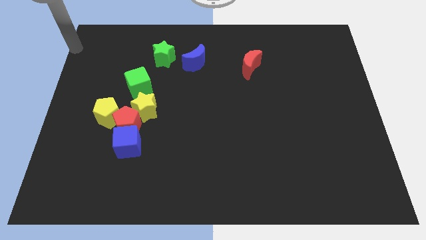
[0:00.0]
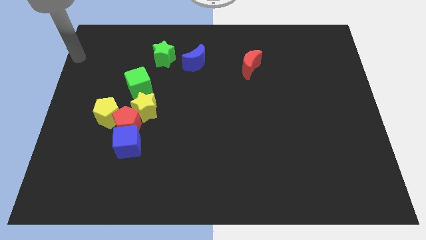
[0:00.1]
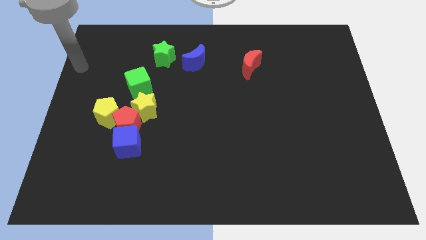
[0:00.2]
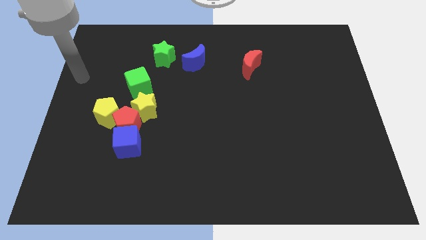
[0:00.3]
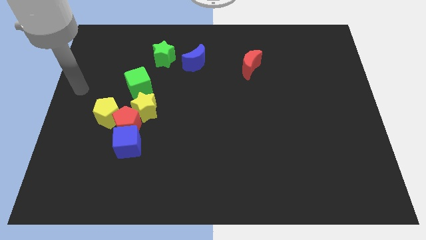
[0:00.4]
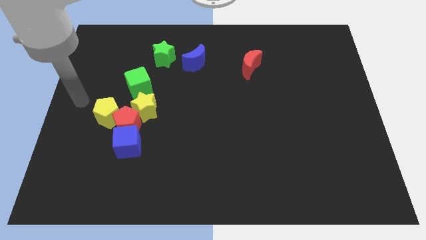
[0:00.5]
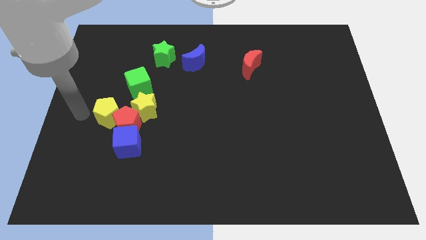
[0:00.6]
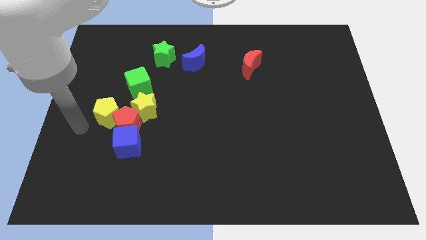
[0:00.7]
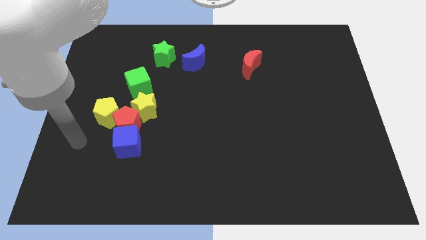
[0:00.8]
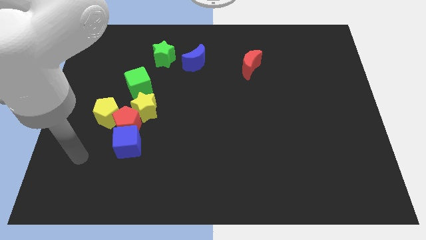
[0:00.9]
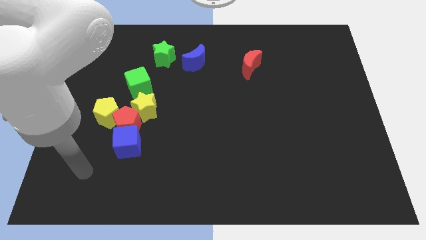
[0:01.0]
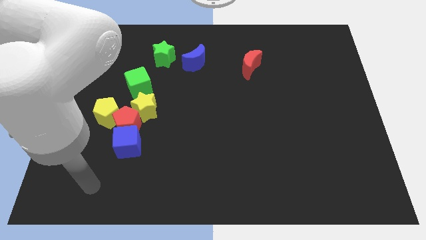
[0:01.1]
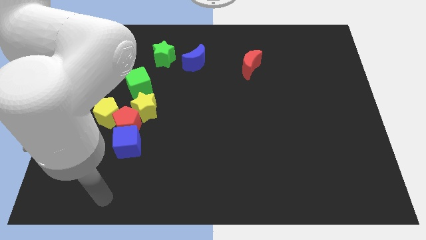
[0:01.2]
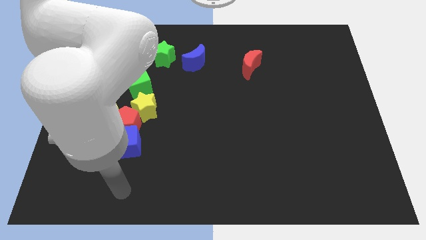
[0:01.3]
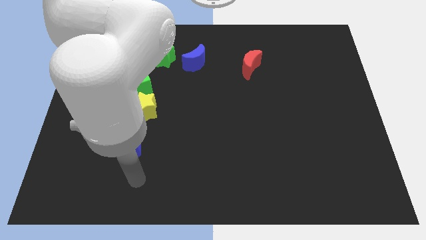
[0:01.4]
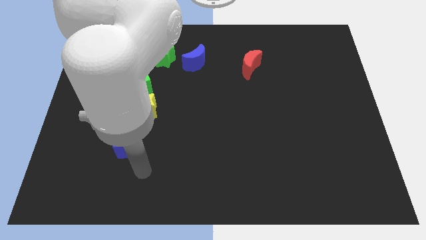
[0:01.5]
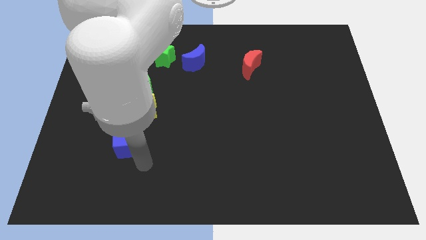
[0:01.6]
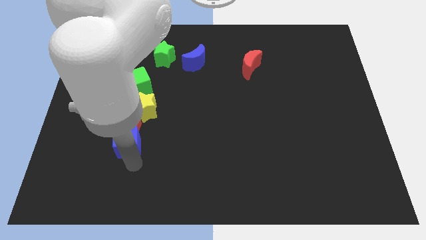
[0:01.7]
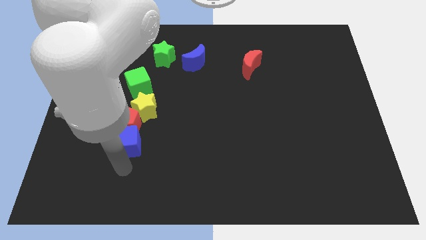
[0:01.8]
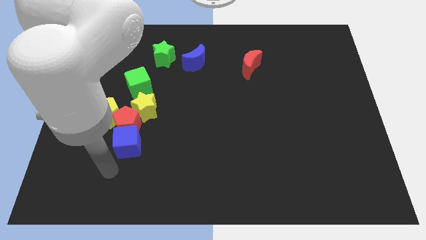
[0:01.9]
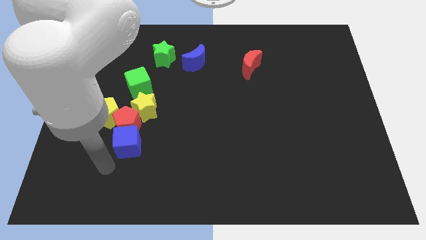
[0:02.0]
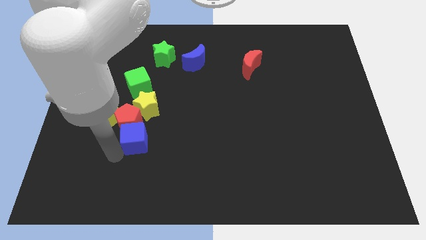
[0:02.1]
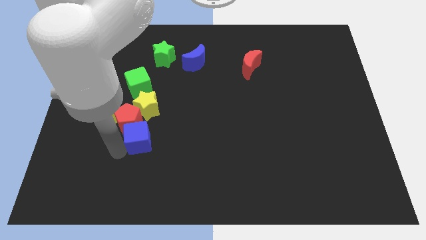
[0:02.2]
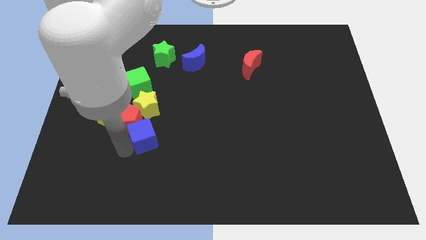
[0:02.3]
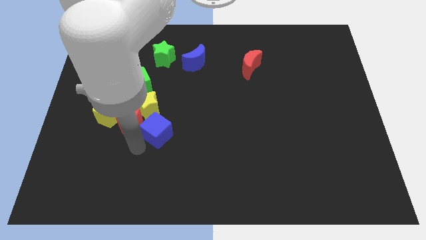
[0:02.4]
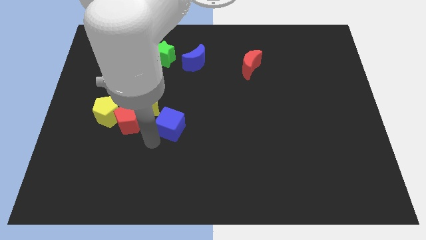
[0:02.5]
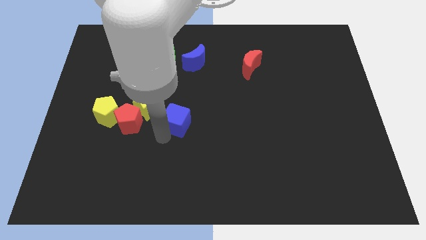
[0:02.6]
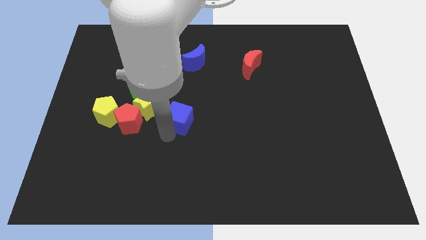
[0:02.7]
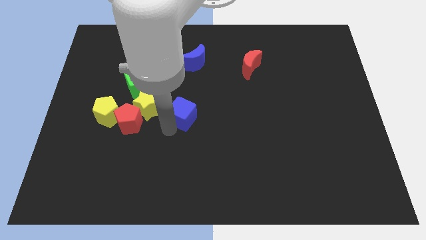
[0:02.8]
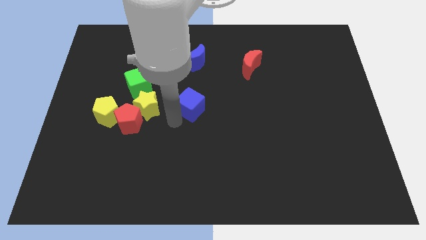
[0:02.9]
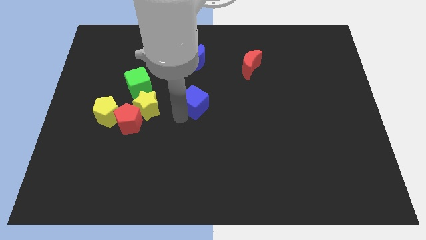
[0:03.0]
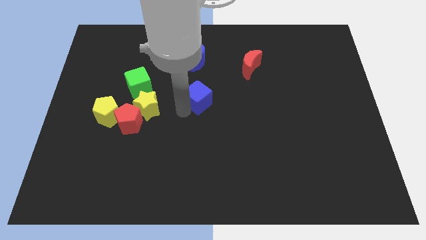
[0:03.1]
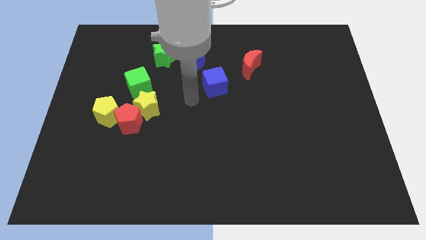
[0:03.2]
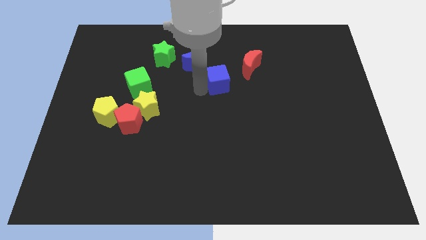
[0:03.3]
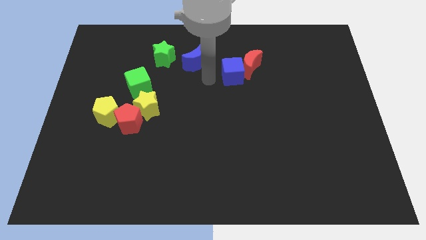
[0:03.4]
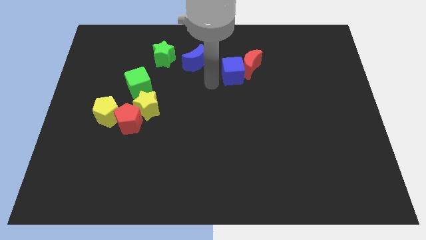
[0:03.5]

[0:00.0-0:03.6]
drag the blue cube into the left side of the red moon

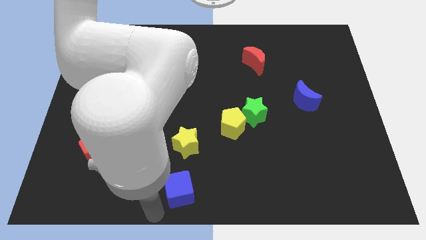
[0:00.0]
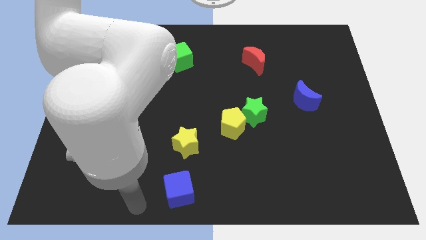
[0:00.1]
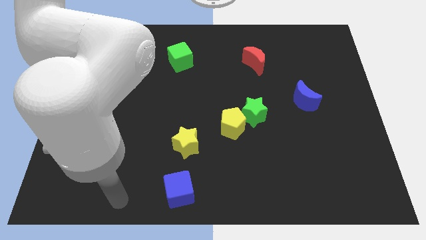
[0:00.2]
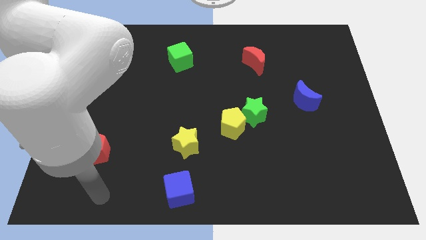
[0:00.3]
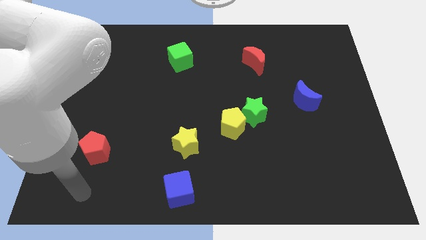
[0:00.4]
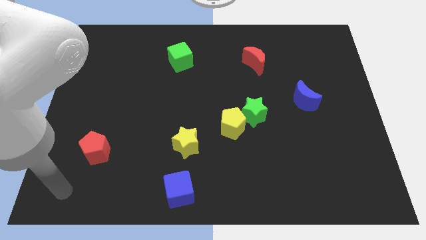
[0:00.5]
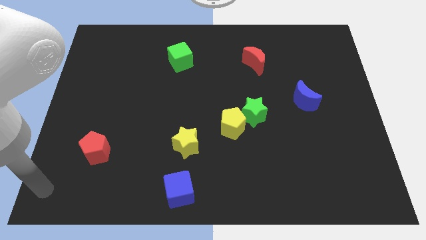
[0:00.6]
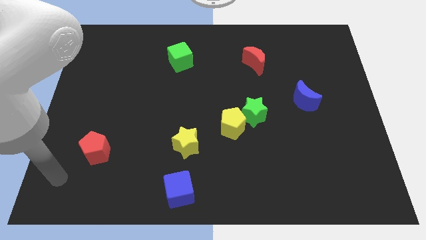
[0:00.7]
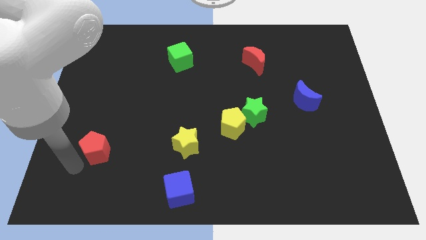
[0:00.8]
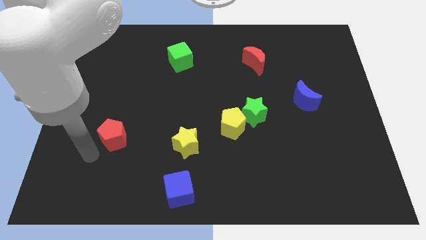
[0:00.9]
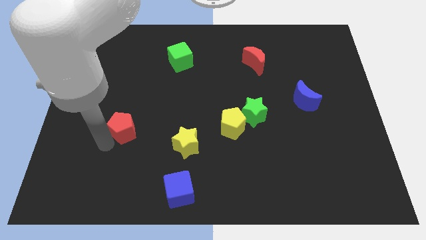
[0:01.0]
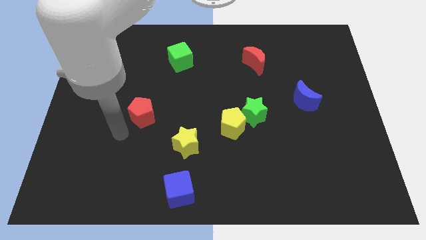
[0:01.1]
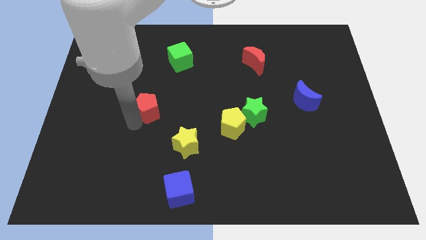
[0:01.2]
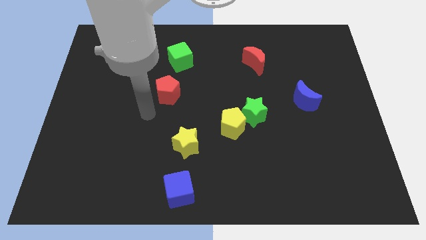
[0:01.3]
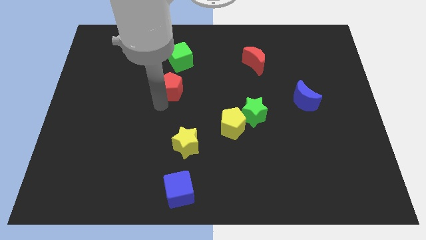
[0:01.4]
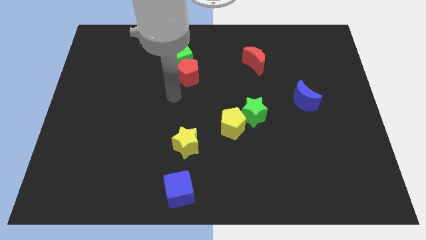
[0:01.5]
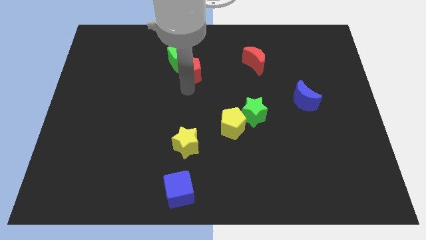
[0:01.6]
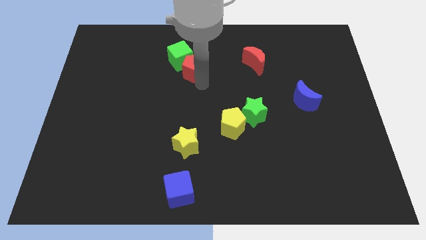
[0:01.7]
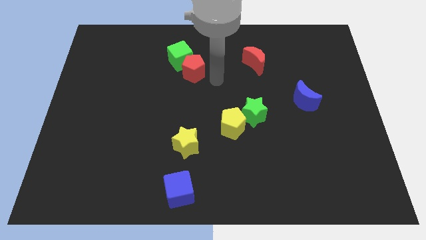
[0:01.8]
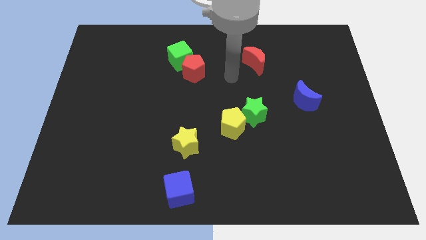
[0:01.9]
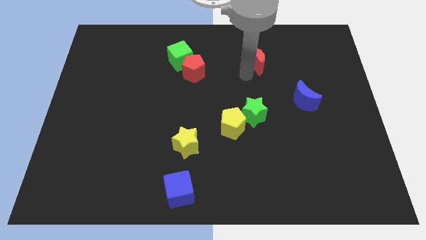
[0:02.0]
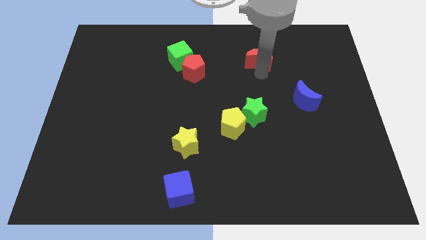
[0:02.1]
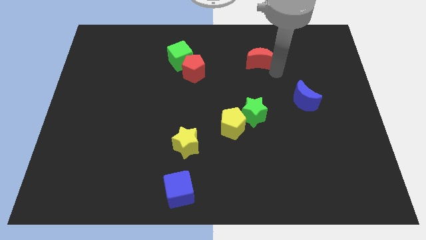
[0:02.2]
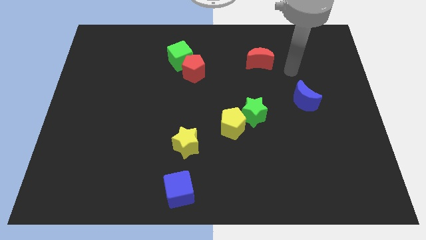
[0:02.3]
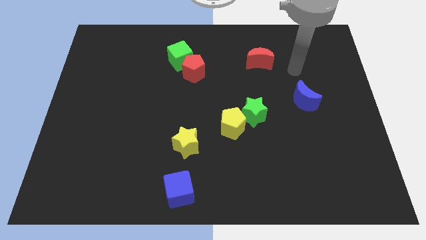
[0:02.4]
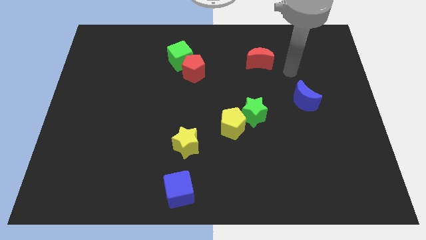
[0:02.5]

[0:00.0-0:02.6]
place the red pentagon close to the green cube

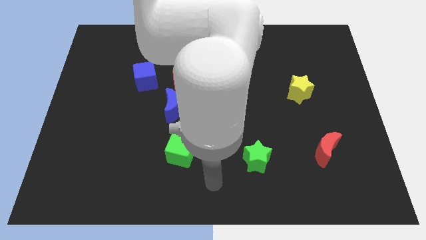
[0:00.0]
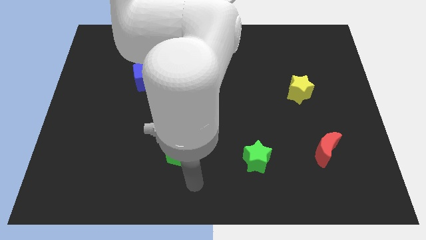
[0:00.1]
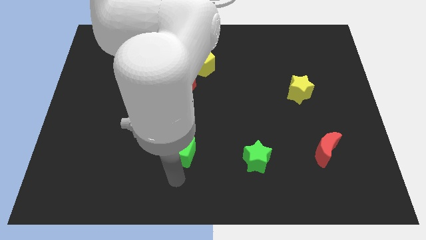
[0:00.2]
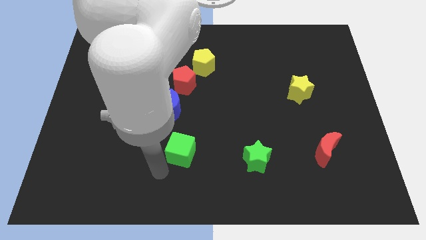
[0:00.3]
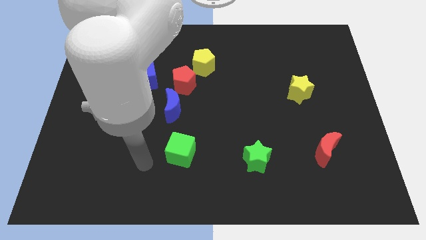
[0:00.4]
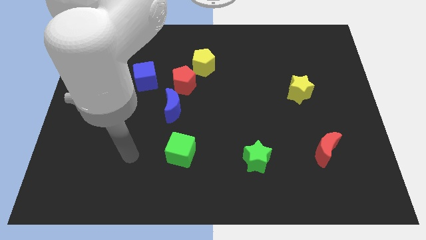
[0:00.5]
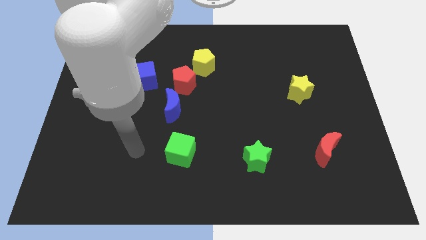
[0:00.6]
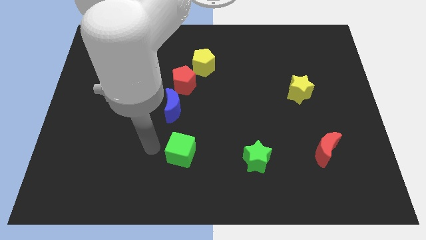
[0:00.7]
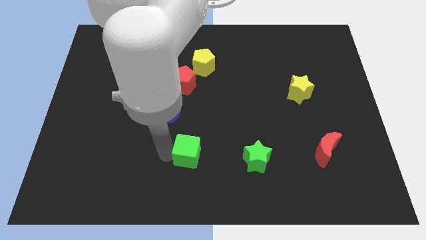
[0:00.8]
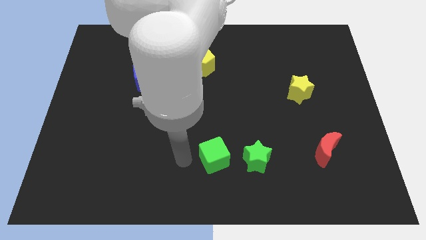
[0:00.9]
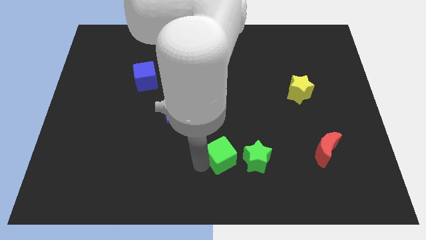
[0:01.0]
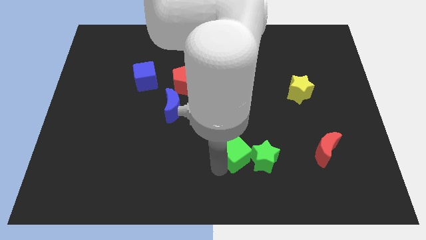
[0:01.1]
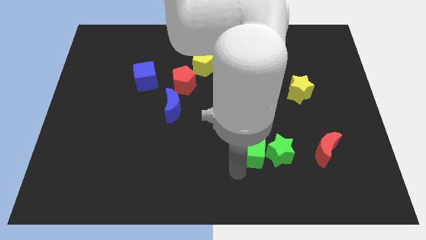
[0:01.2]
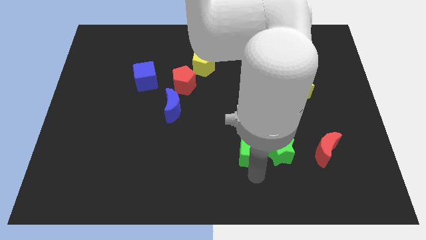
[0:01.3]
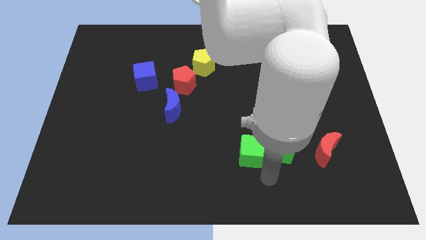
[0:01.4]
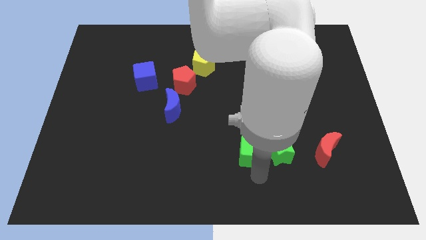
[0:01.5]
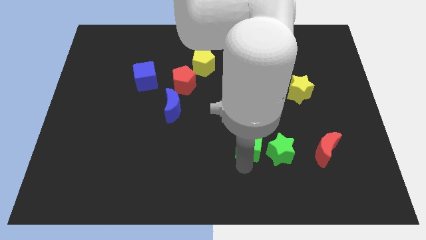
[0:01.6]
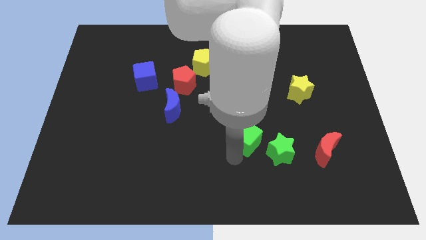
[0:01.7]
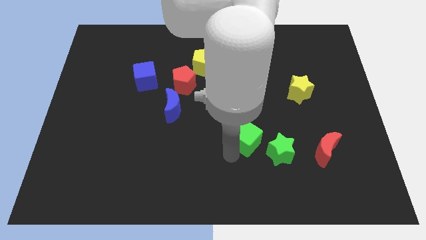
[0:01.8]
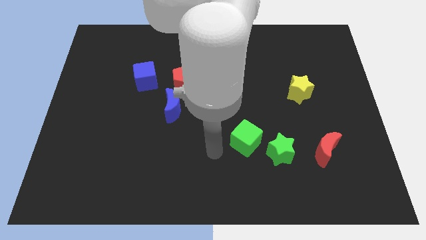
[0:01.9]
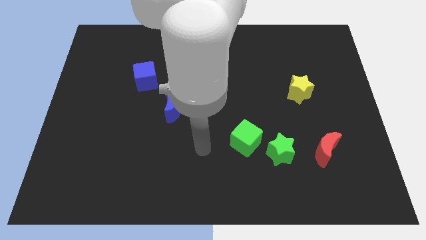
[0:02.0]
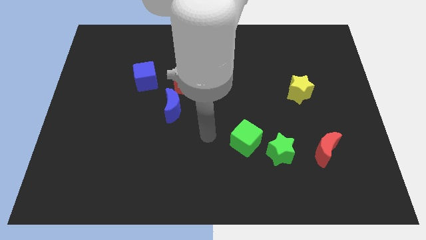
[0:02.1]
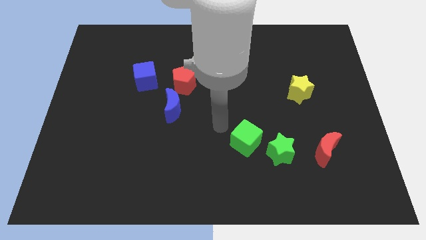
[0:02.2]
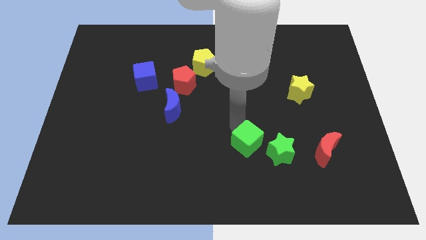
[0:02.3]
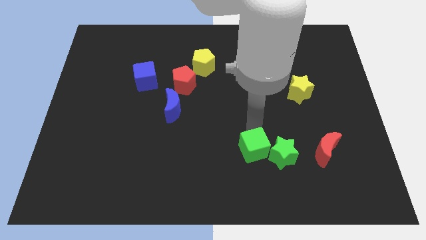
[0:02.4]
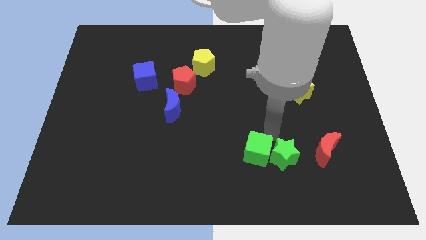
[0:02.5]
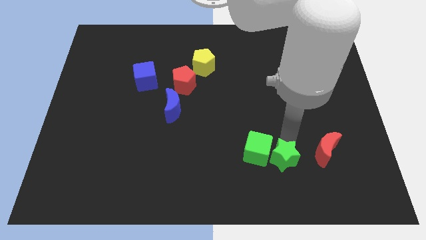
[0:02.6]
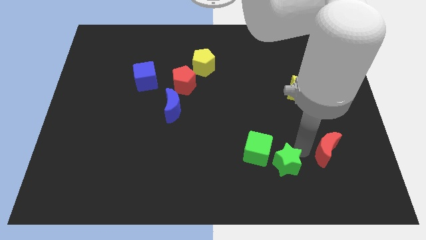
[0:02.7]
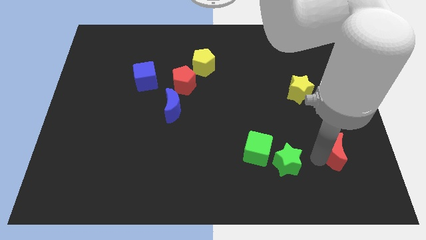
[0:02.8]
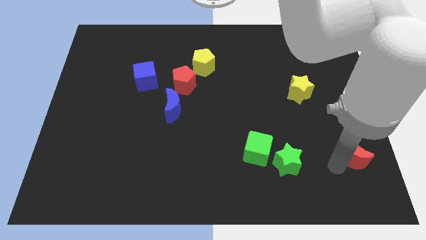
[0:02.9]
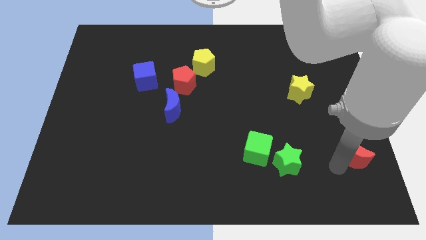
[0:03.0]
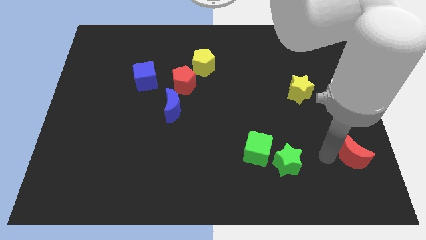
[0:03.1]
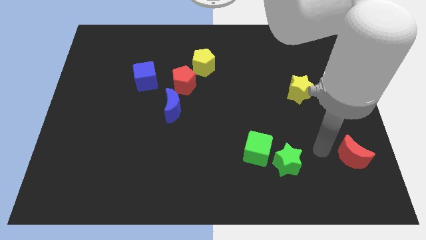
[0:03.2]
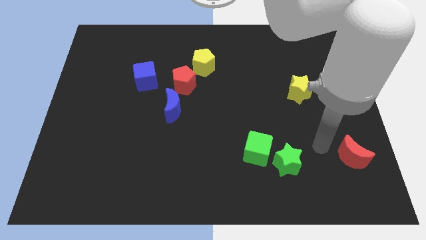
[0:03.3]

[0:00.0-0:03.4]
move the green cube on the left side to the green star
